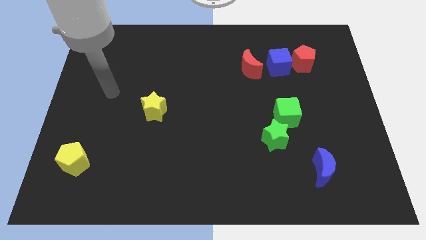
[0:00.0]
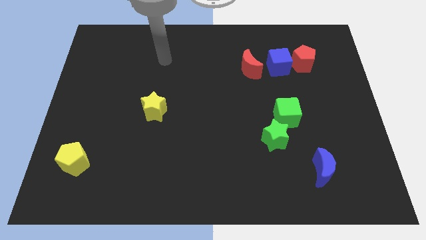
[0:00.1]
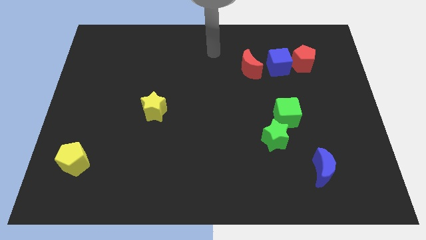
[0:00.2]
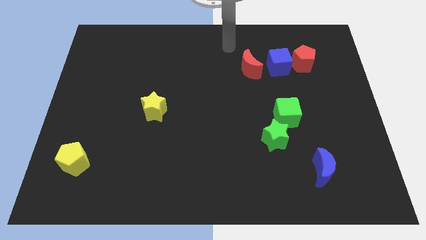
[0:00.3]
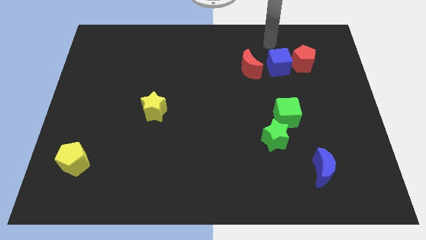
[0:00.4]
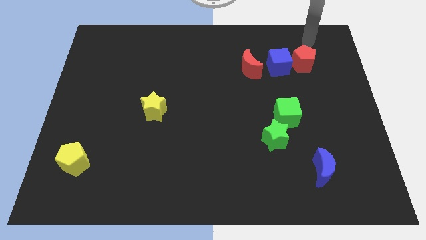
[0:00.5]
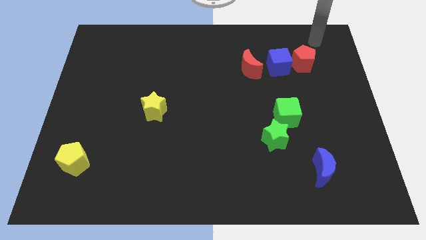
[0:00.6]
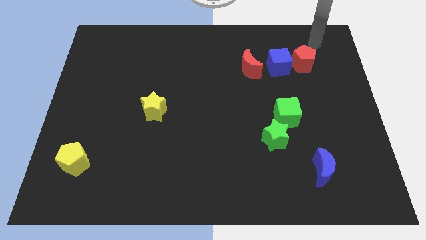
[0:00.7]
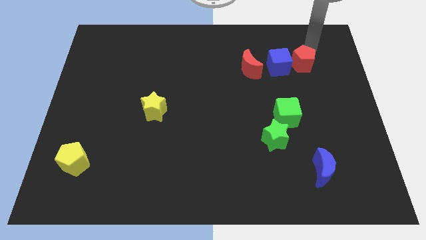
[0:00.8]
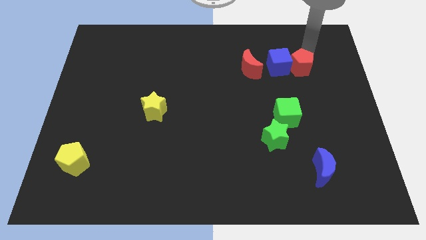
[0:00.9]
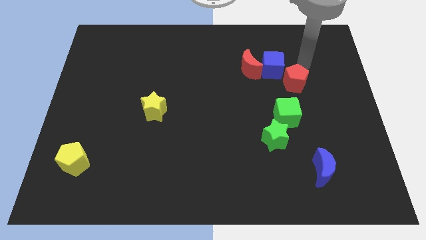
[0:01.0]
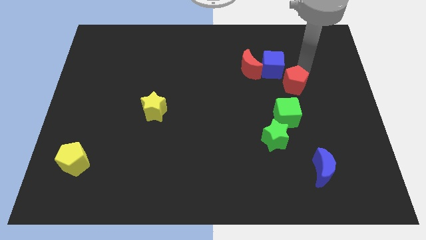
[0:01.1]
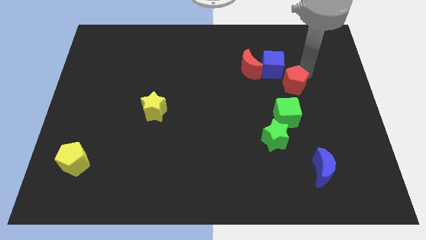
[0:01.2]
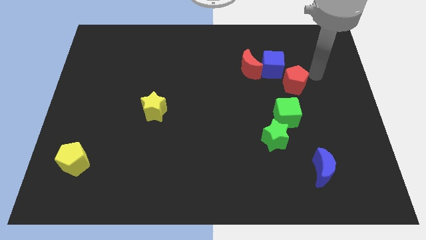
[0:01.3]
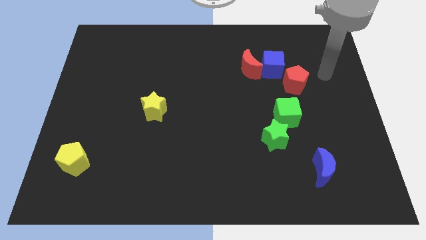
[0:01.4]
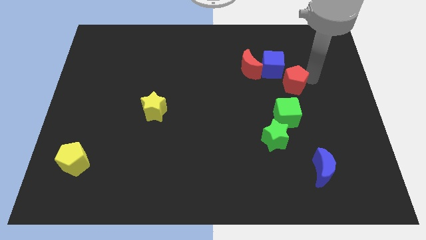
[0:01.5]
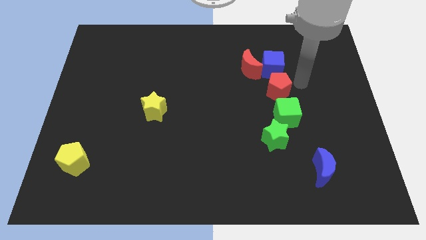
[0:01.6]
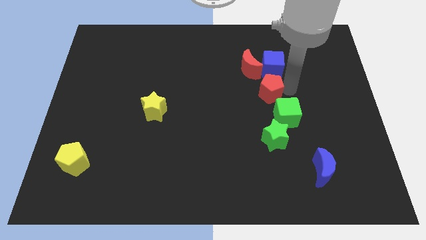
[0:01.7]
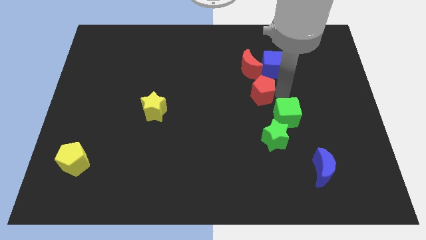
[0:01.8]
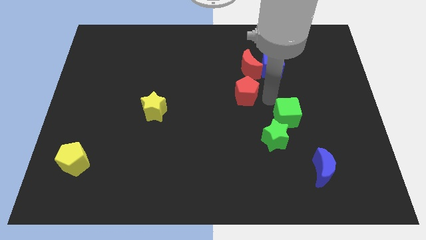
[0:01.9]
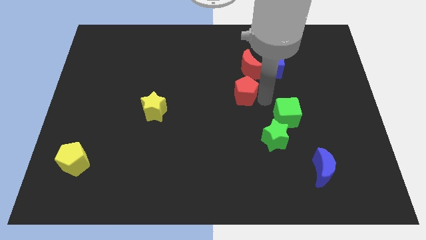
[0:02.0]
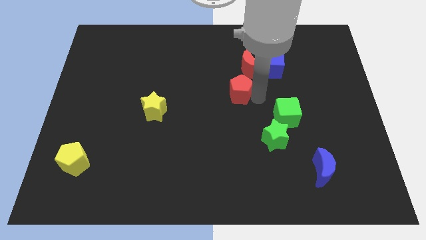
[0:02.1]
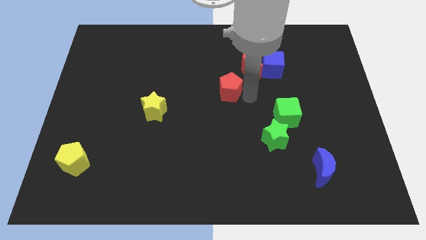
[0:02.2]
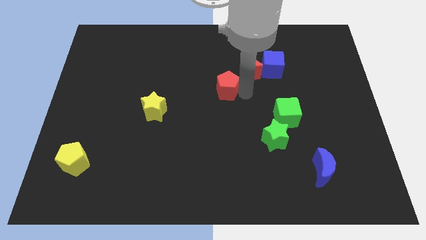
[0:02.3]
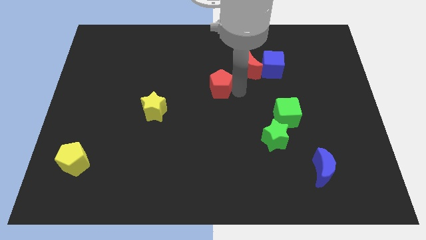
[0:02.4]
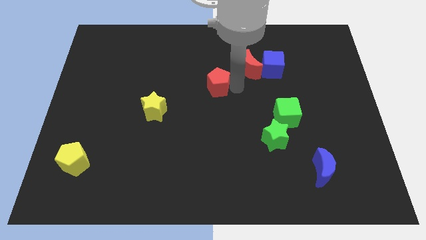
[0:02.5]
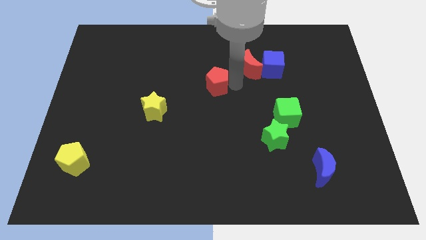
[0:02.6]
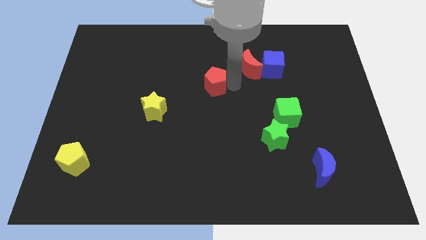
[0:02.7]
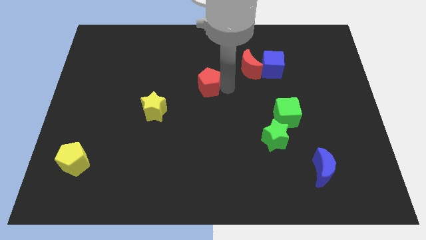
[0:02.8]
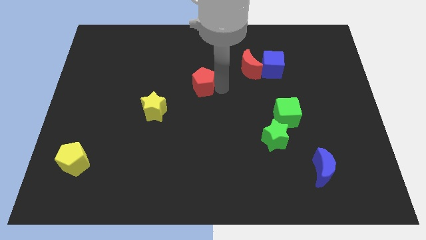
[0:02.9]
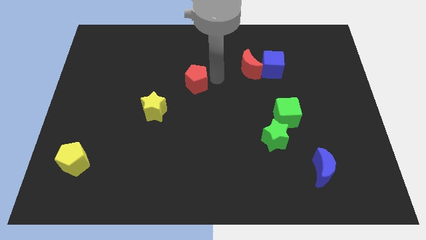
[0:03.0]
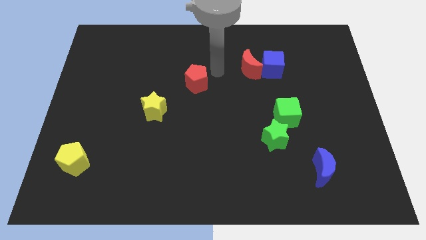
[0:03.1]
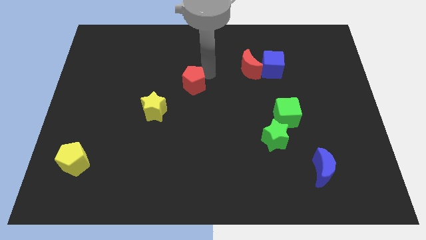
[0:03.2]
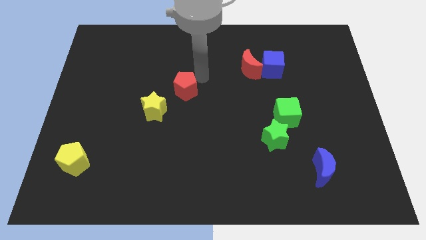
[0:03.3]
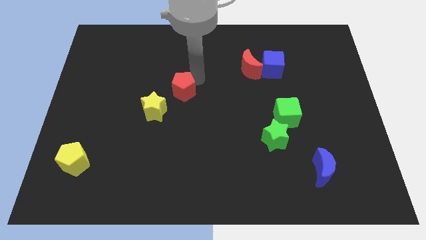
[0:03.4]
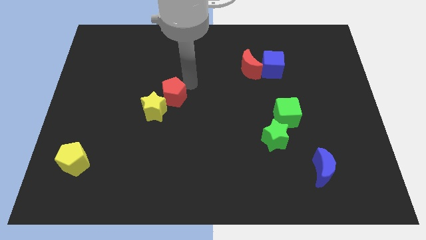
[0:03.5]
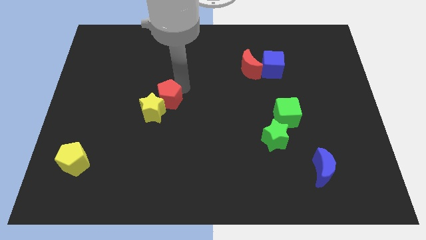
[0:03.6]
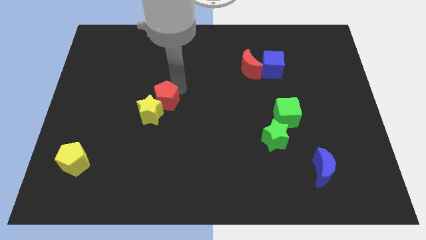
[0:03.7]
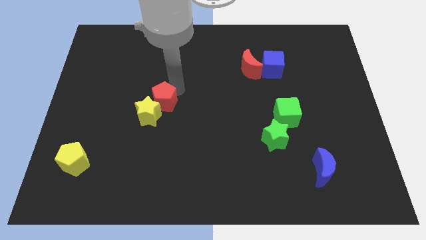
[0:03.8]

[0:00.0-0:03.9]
slide the red pentagon next to the yellow star

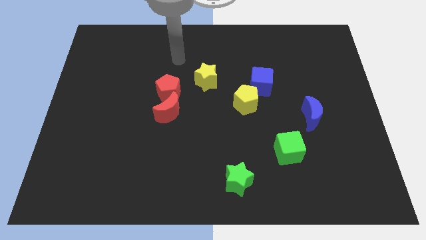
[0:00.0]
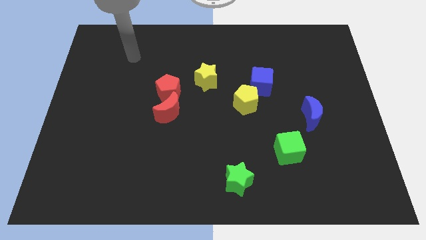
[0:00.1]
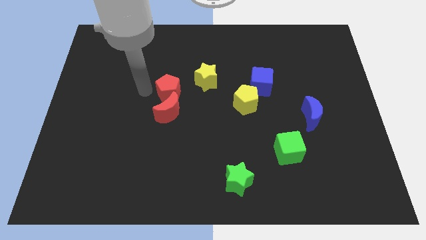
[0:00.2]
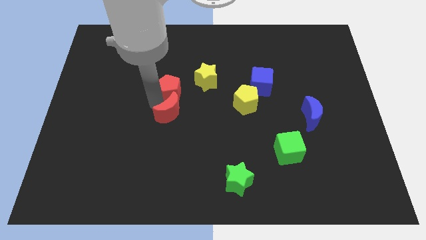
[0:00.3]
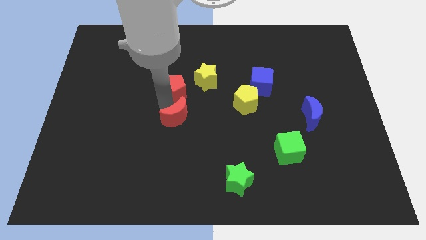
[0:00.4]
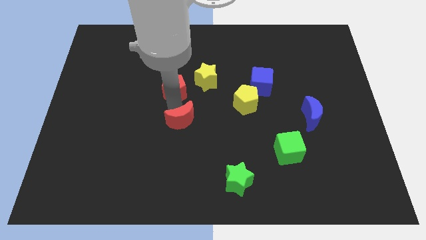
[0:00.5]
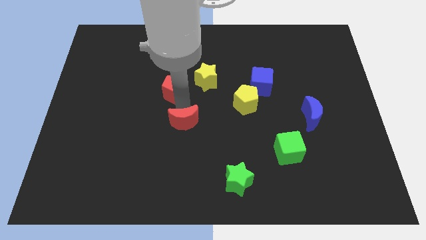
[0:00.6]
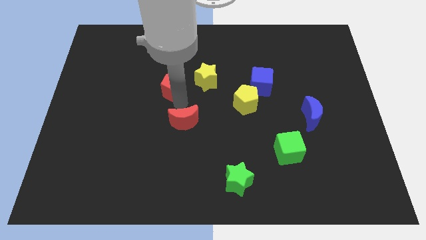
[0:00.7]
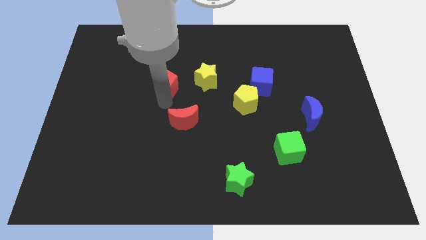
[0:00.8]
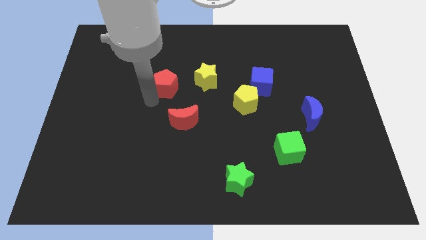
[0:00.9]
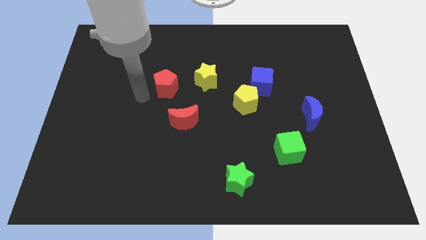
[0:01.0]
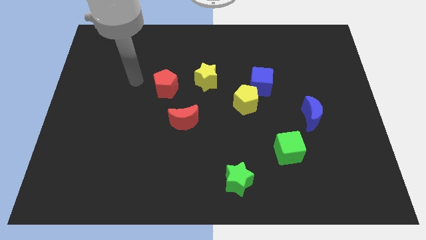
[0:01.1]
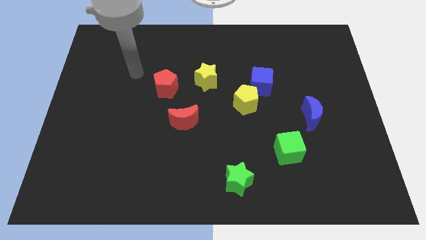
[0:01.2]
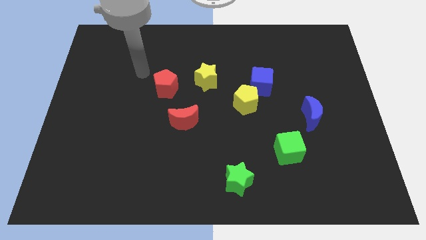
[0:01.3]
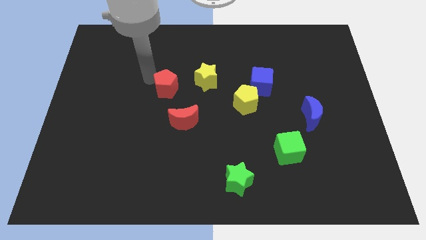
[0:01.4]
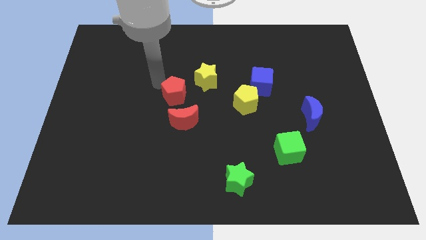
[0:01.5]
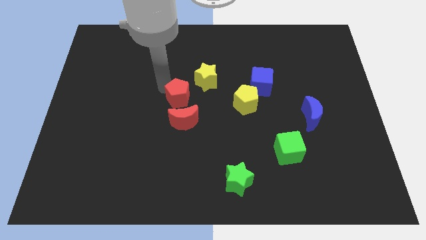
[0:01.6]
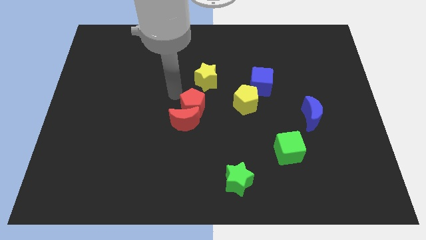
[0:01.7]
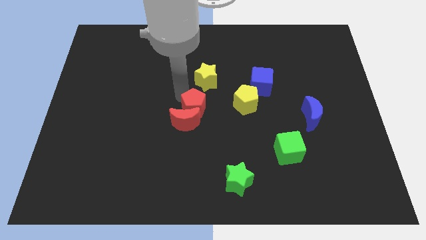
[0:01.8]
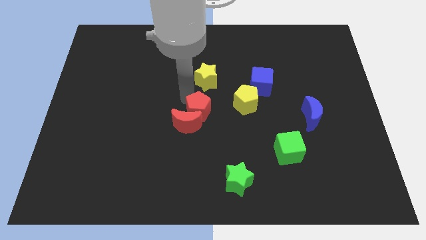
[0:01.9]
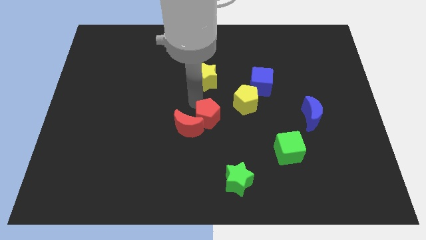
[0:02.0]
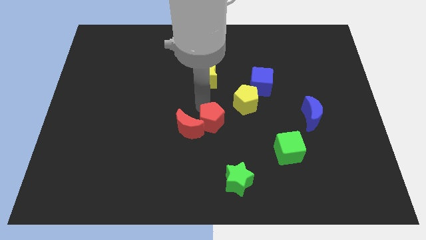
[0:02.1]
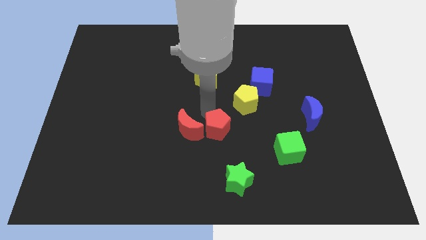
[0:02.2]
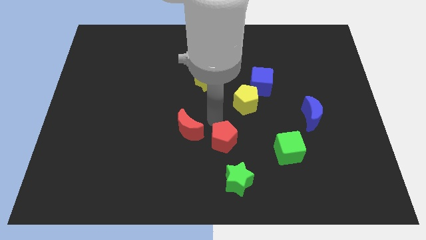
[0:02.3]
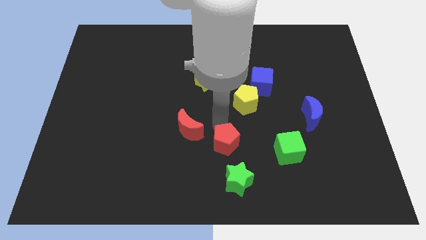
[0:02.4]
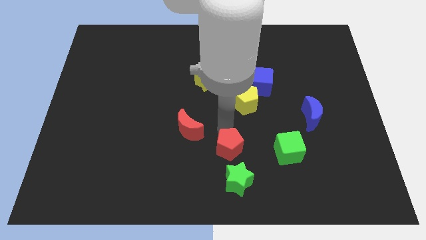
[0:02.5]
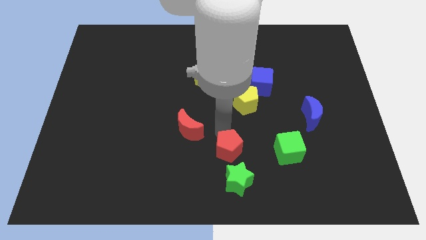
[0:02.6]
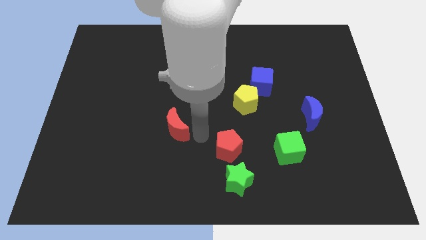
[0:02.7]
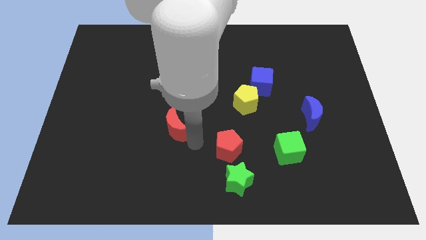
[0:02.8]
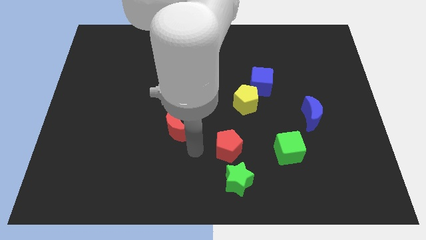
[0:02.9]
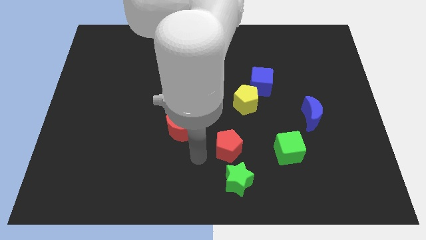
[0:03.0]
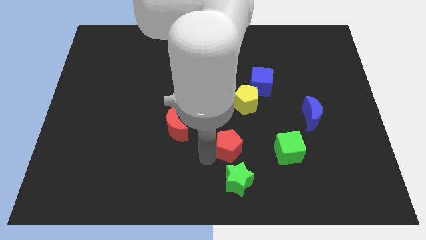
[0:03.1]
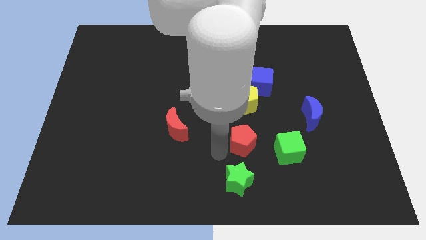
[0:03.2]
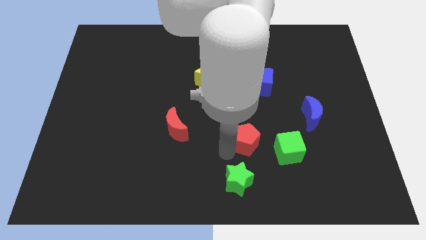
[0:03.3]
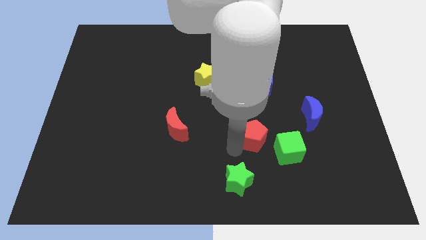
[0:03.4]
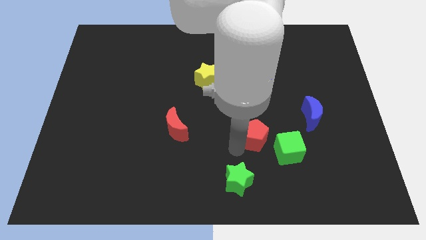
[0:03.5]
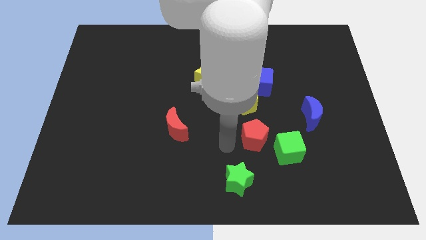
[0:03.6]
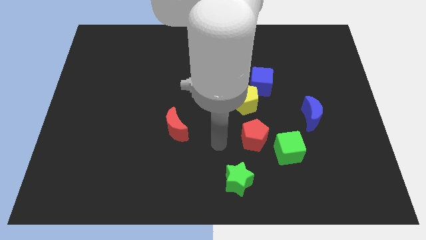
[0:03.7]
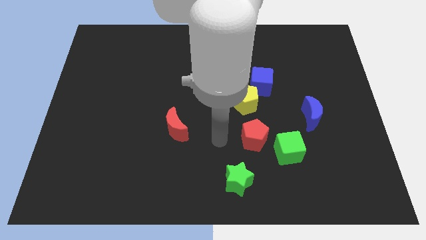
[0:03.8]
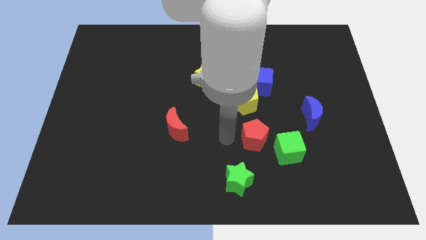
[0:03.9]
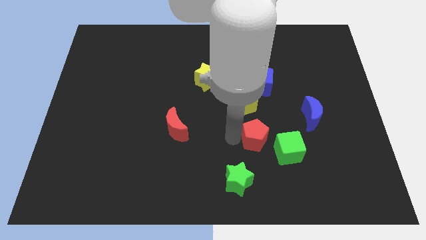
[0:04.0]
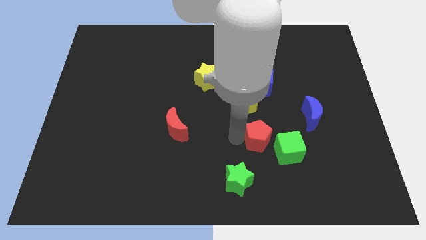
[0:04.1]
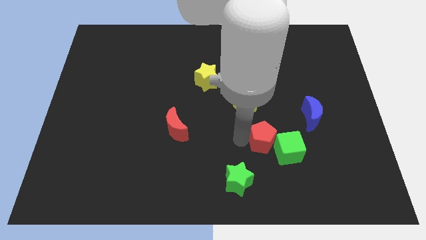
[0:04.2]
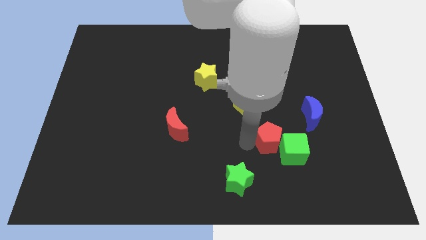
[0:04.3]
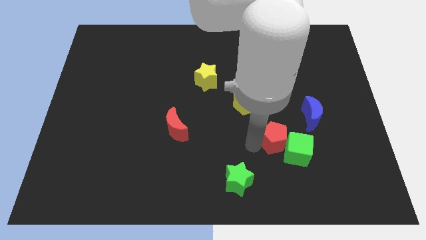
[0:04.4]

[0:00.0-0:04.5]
move the red pentagon close to the green cube
